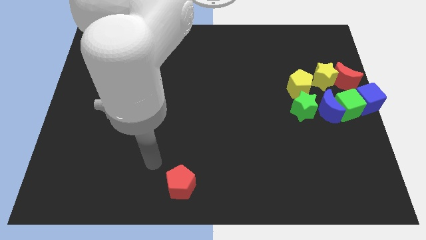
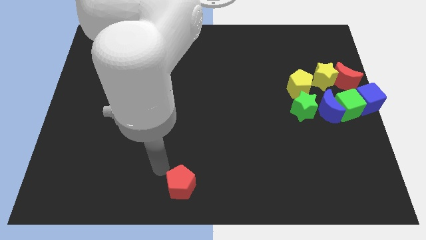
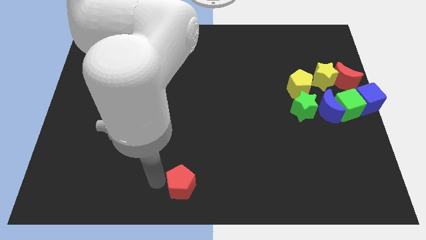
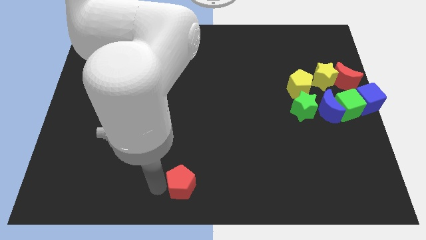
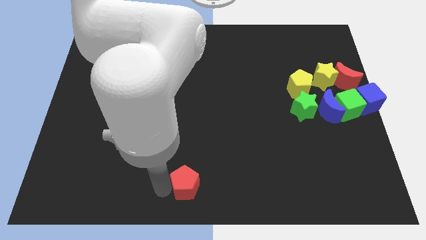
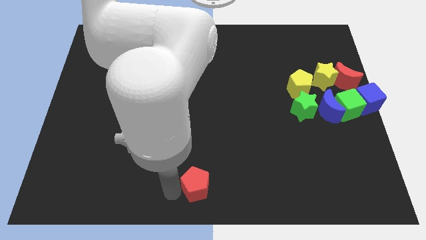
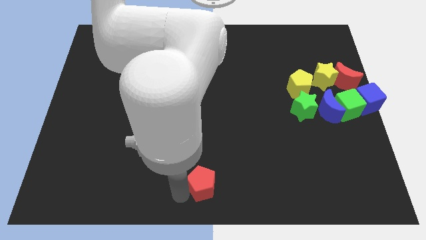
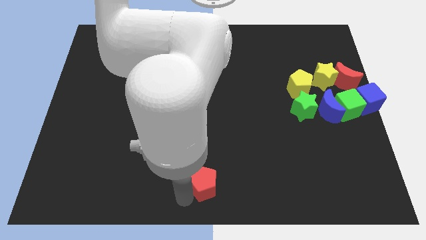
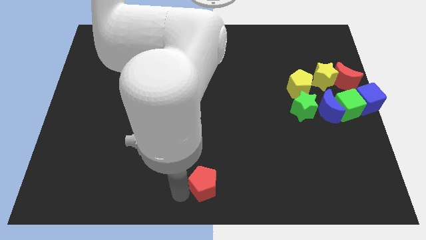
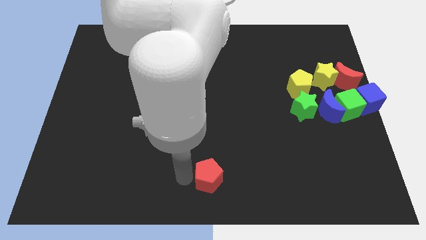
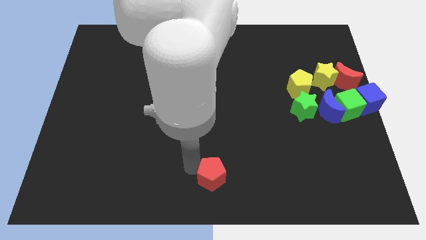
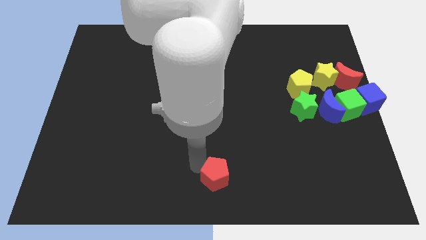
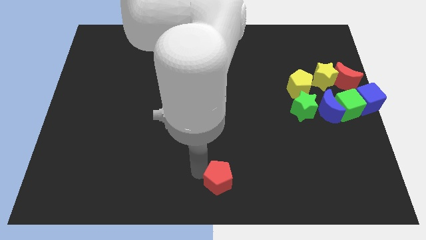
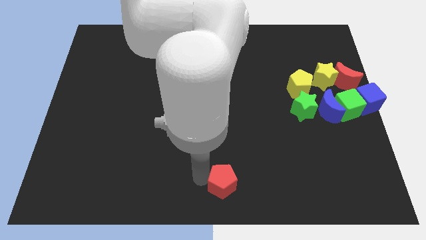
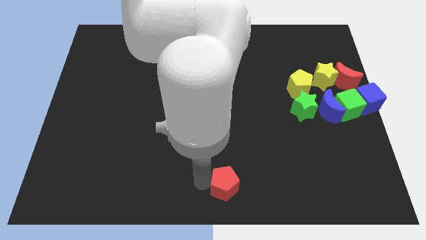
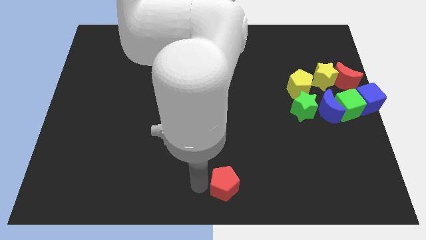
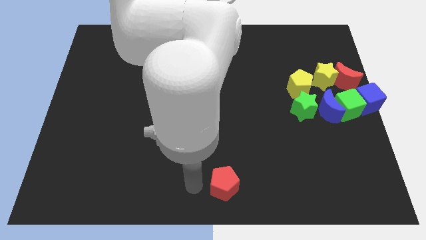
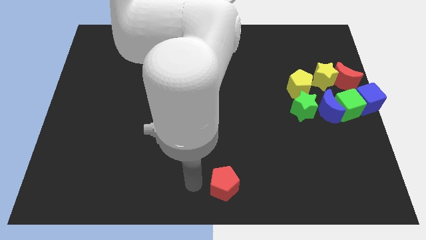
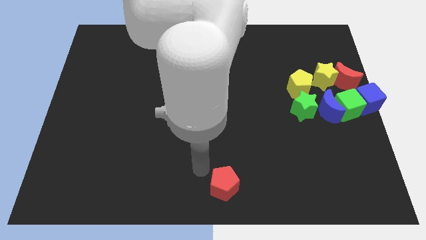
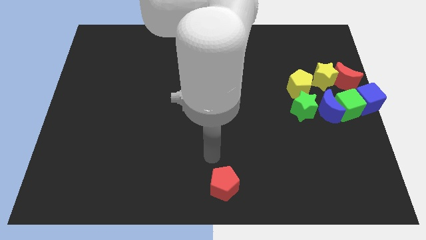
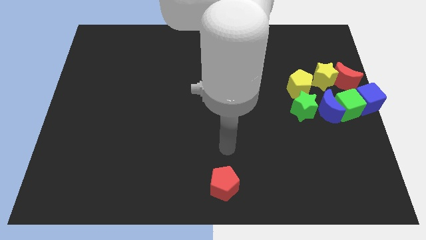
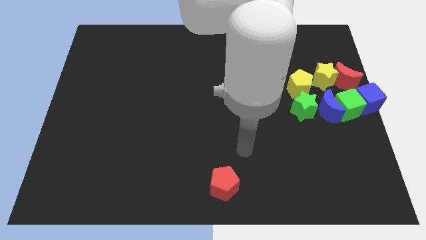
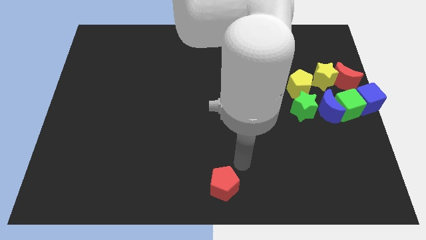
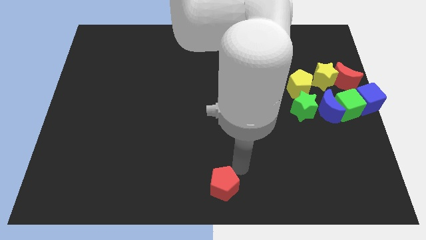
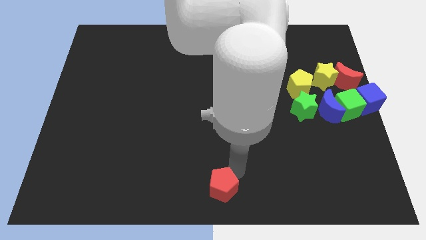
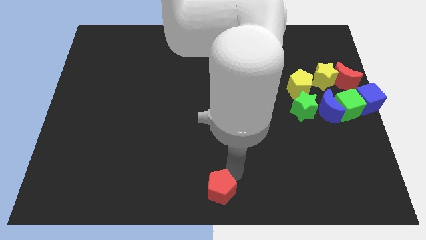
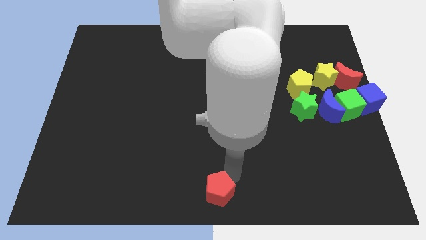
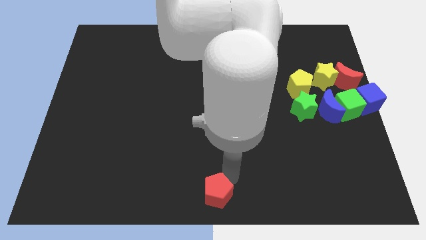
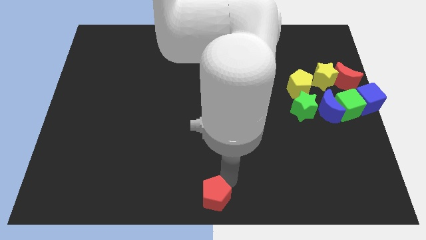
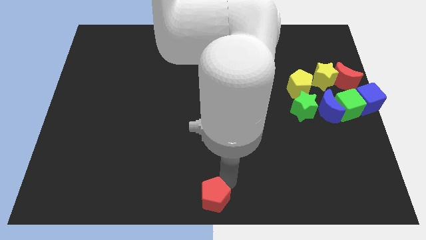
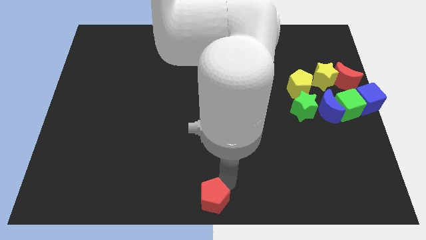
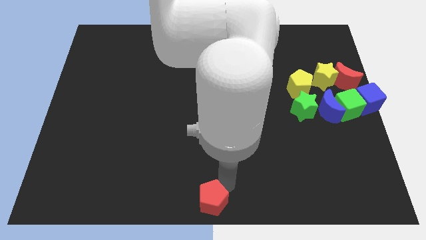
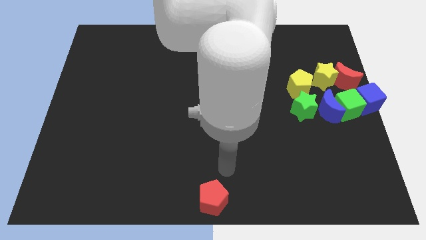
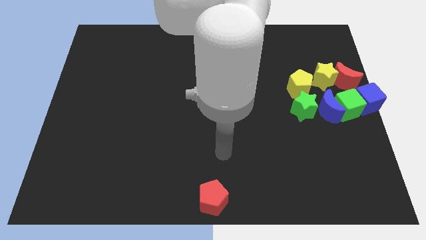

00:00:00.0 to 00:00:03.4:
put the red pentagon at the bottom center of the board

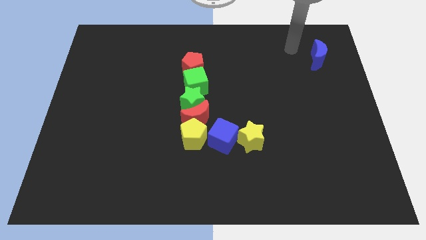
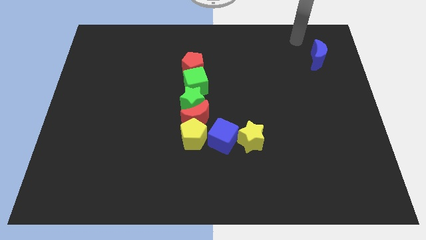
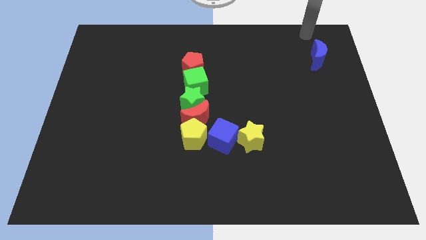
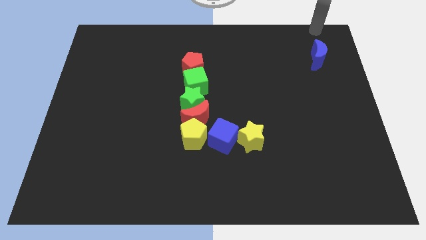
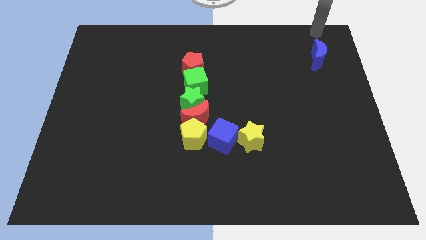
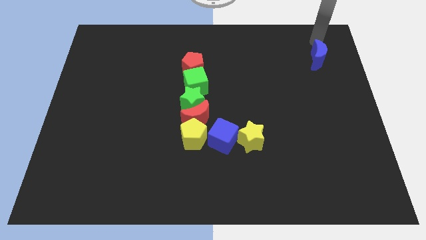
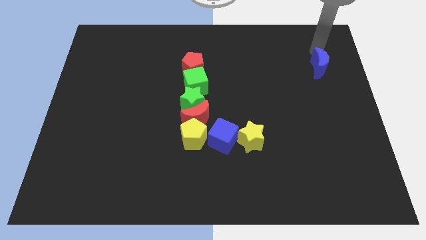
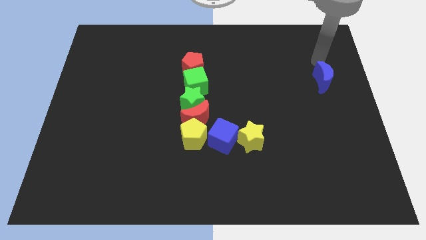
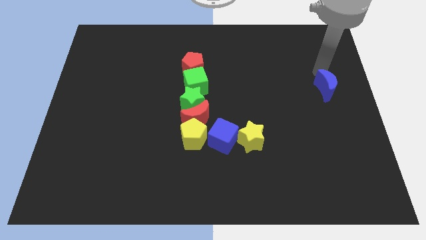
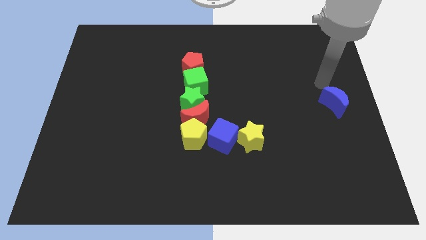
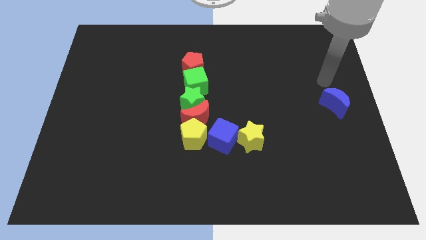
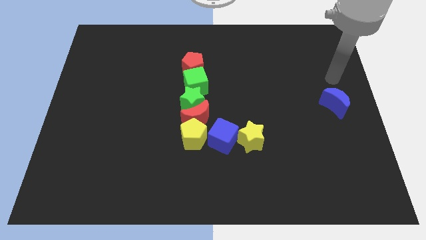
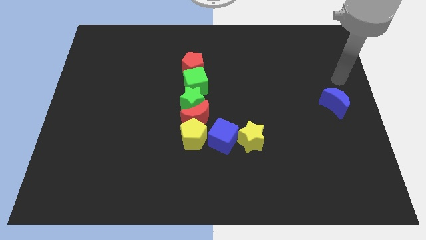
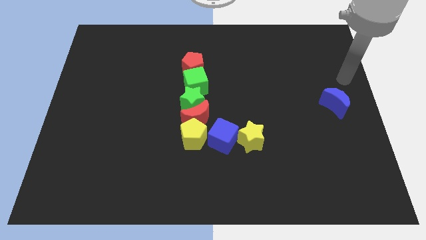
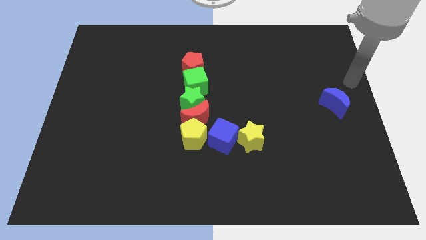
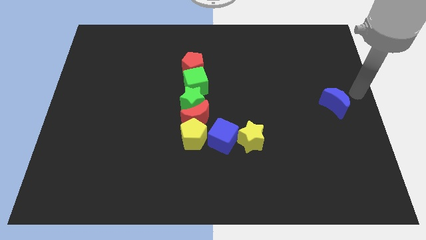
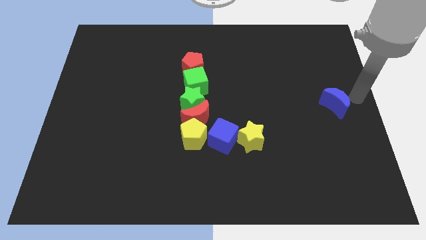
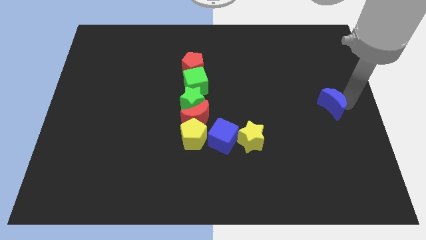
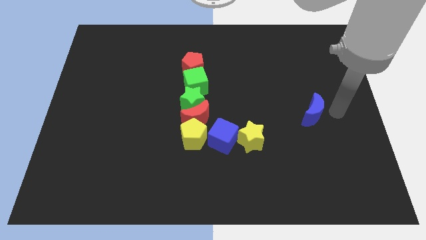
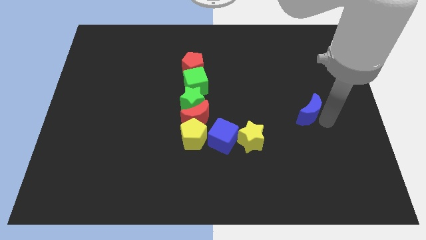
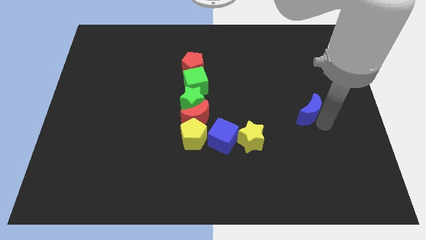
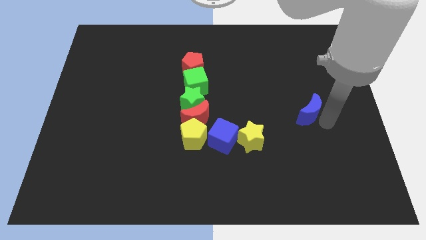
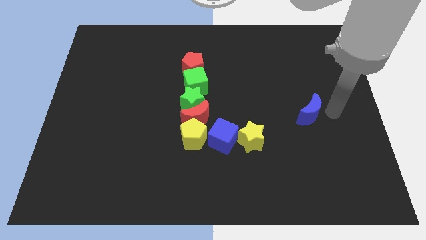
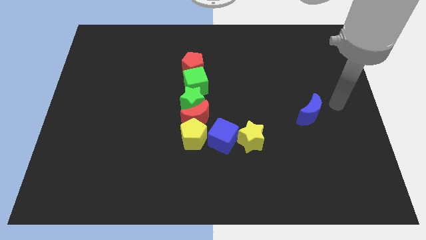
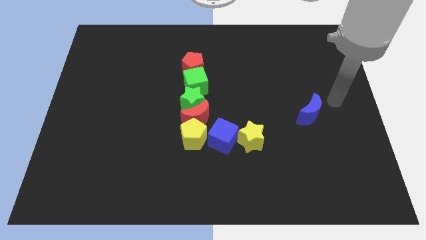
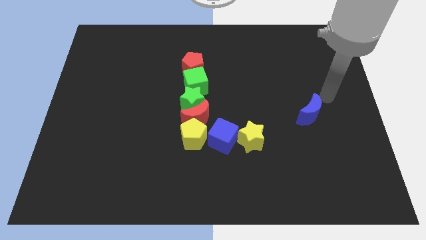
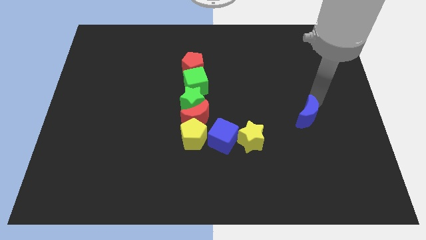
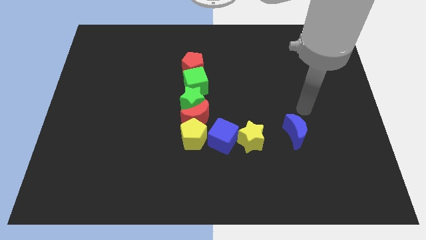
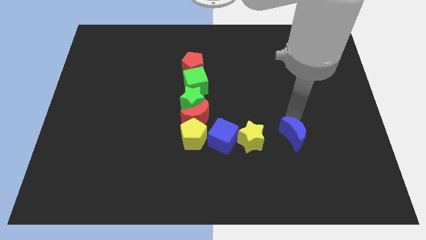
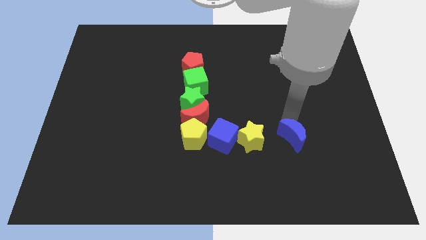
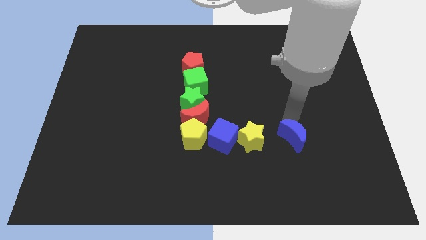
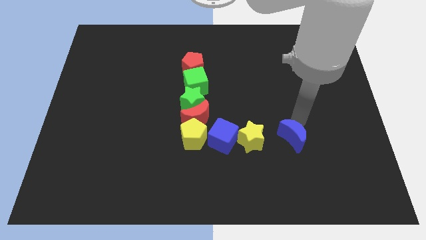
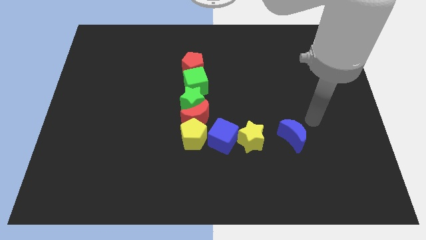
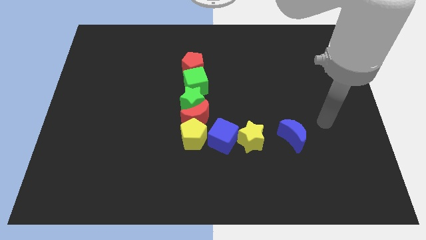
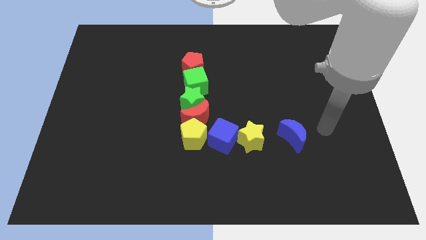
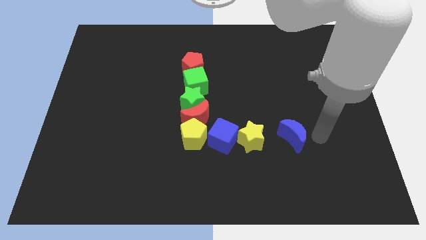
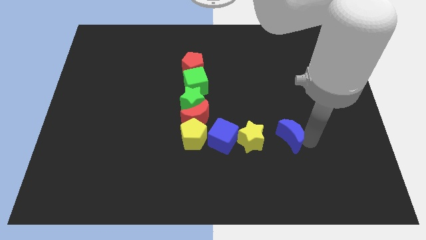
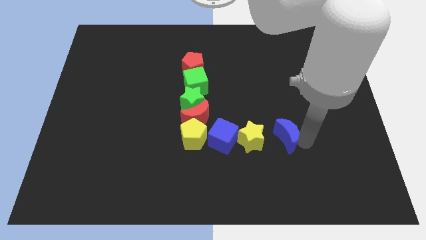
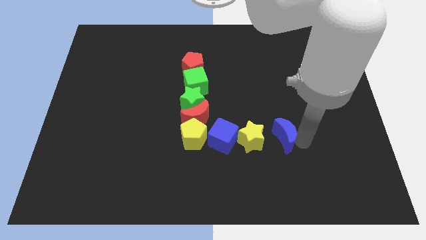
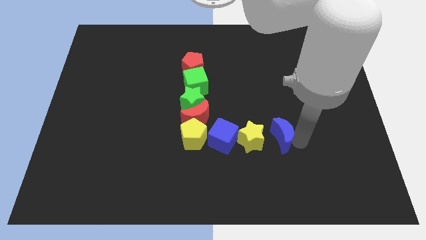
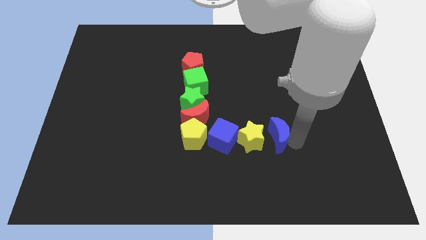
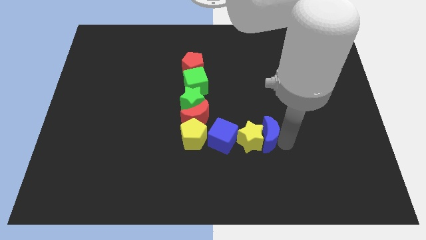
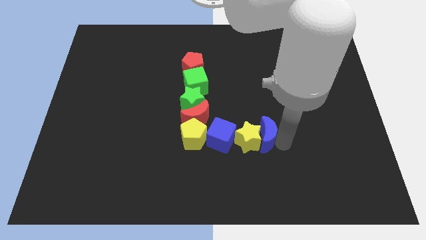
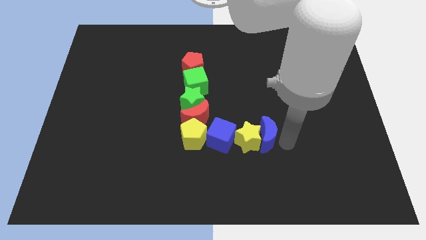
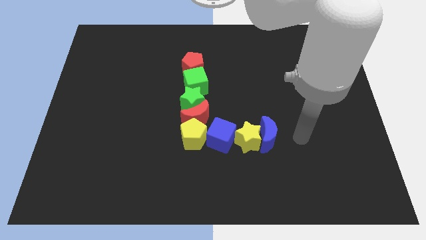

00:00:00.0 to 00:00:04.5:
move the blue crescent to the right side of the yellow star

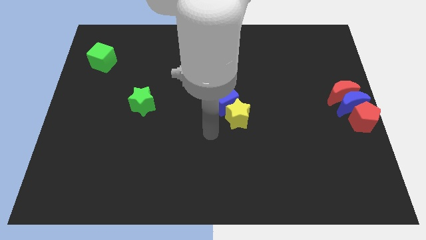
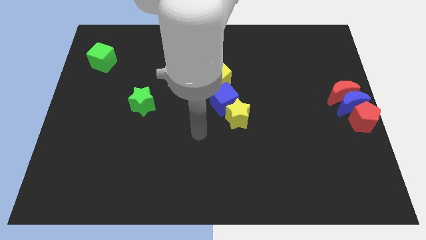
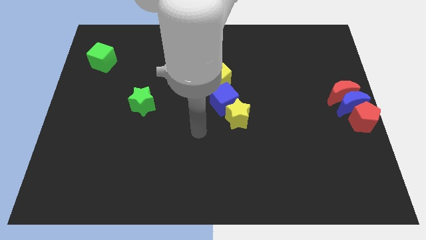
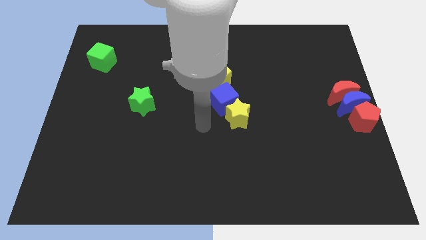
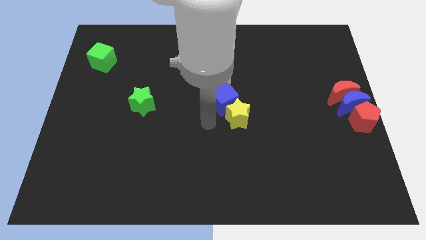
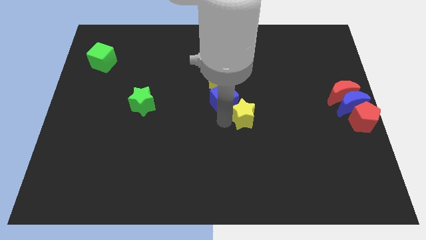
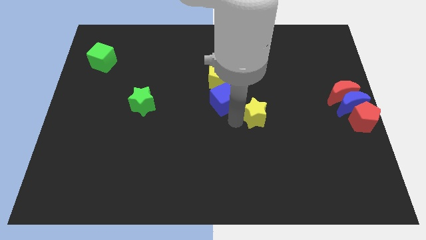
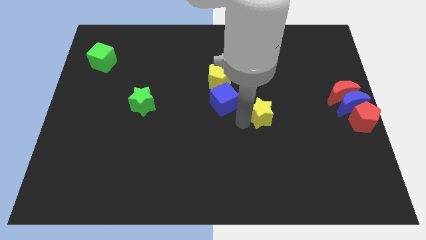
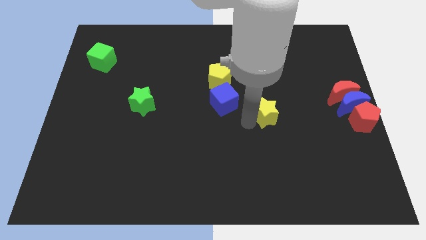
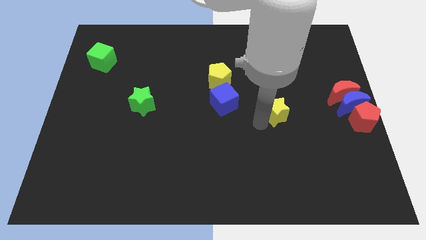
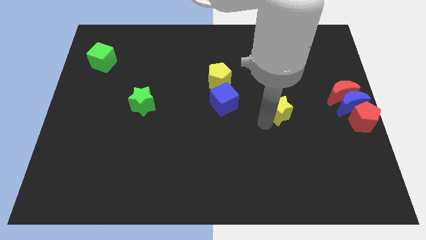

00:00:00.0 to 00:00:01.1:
separate the yellow star from the blue cube
